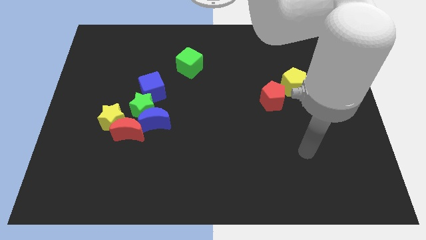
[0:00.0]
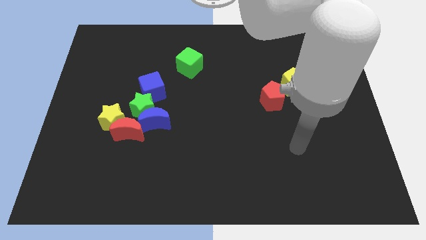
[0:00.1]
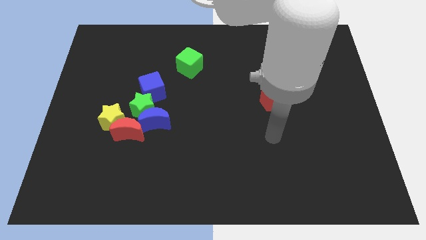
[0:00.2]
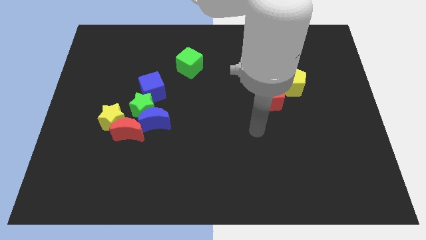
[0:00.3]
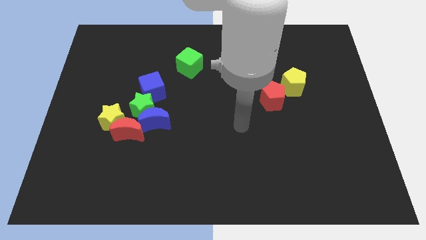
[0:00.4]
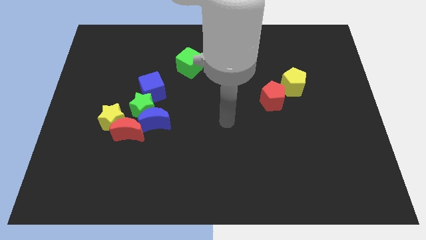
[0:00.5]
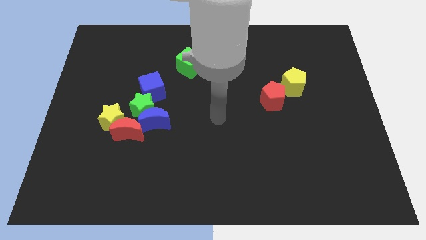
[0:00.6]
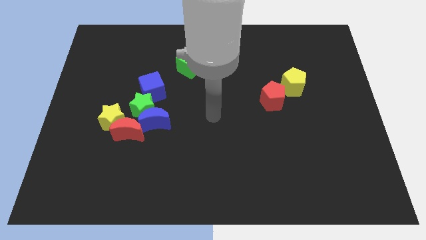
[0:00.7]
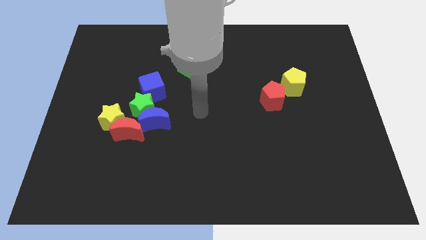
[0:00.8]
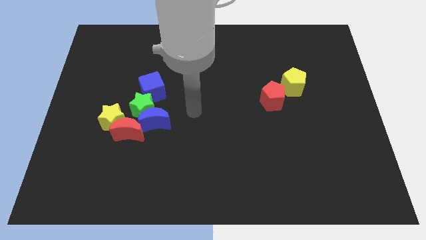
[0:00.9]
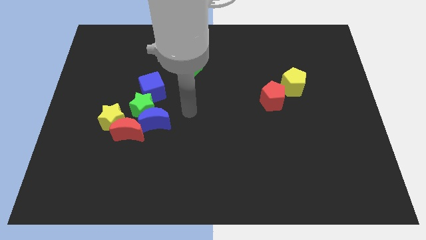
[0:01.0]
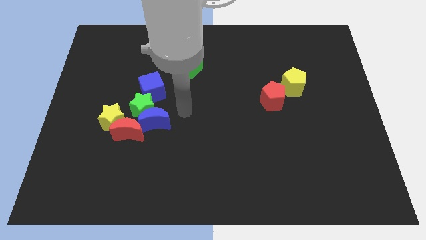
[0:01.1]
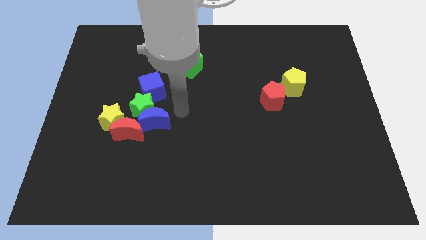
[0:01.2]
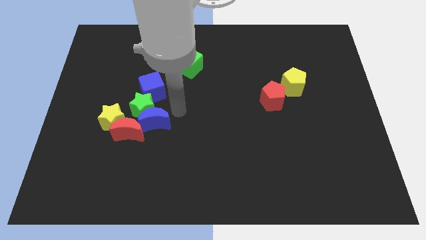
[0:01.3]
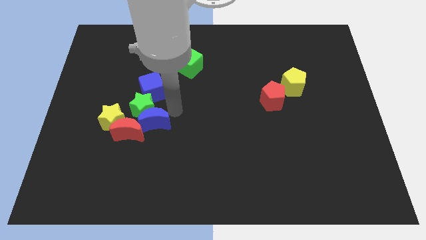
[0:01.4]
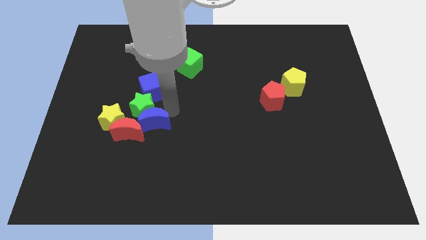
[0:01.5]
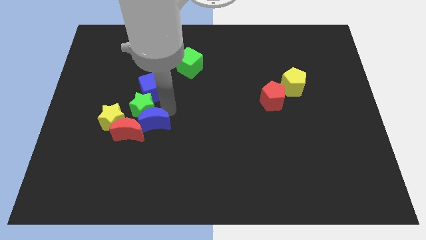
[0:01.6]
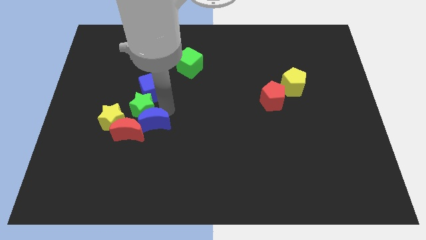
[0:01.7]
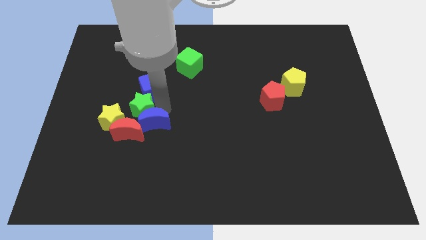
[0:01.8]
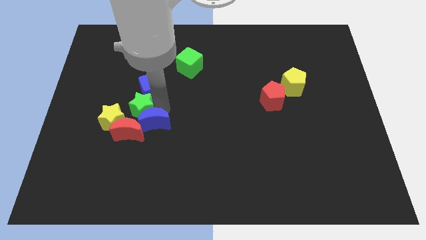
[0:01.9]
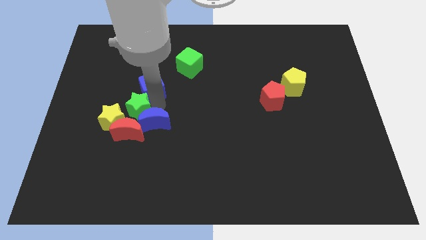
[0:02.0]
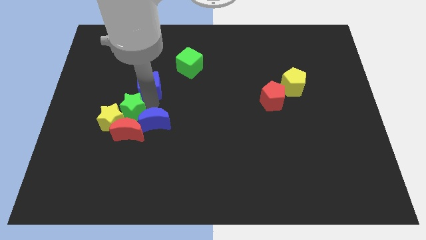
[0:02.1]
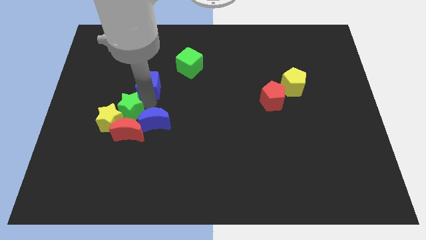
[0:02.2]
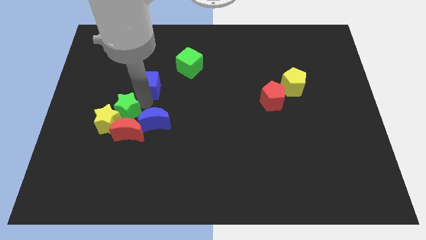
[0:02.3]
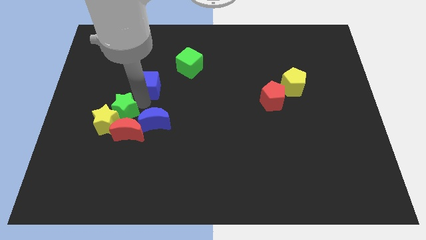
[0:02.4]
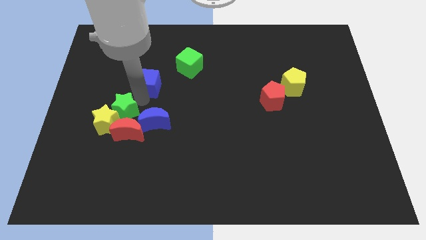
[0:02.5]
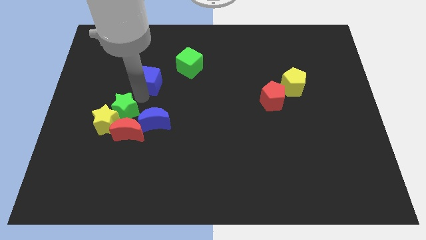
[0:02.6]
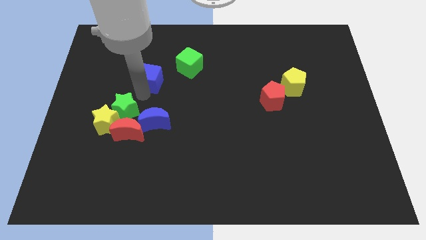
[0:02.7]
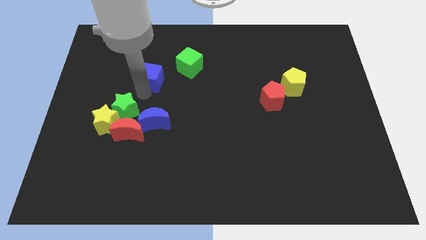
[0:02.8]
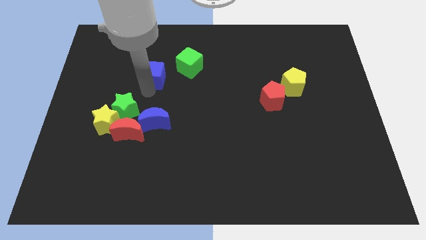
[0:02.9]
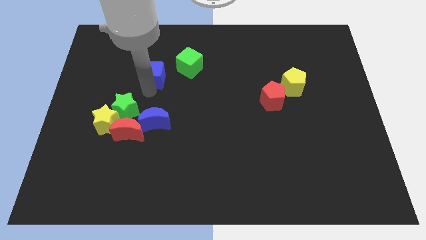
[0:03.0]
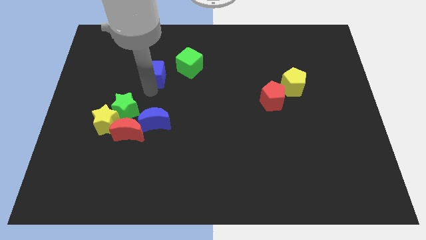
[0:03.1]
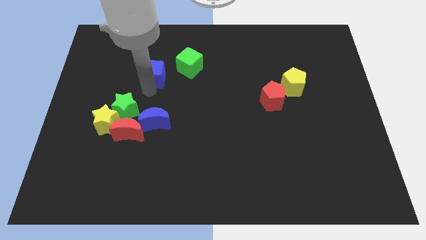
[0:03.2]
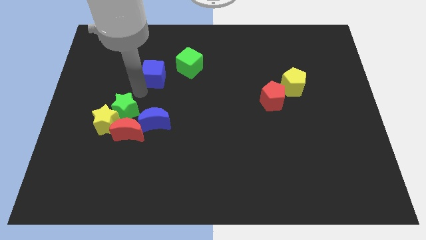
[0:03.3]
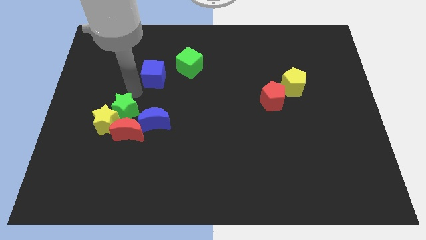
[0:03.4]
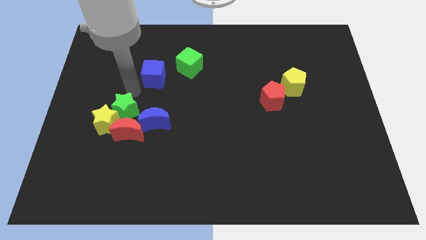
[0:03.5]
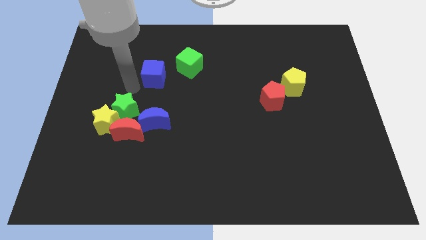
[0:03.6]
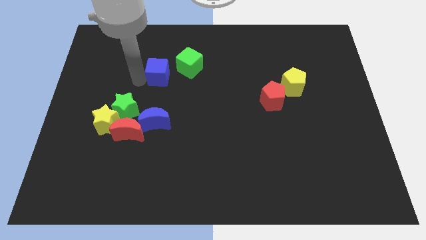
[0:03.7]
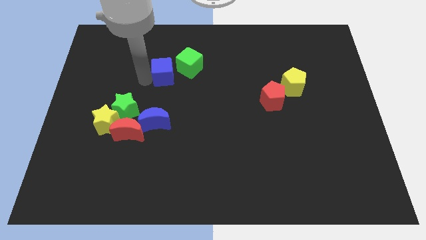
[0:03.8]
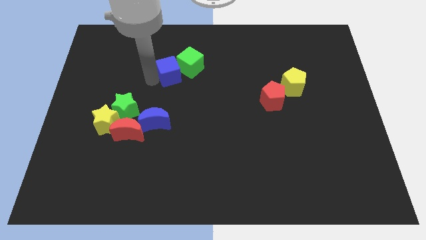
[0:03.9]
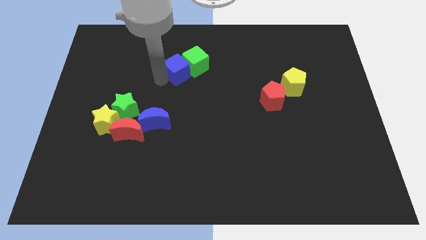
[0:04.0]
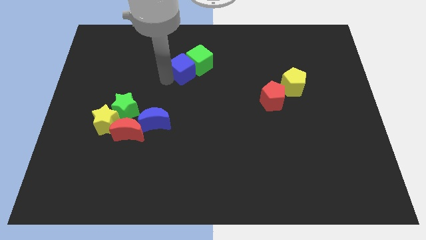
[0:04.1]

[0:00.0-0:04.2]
move the blue cube to the green cube

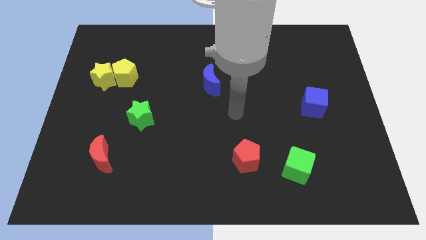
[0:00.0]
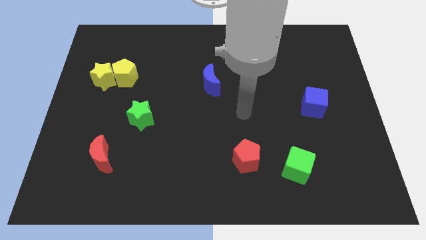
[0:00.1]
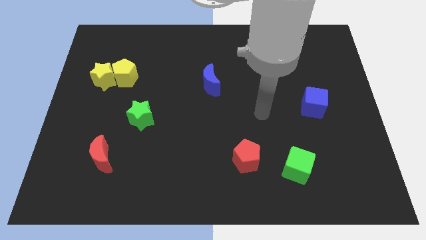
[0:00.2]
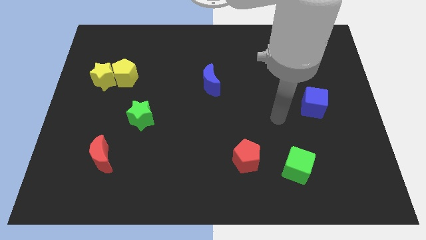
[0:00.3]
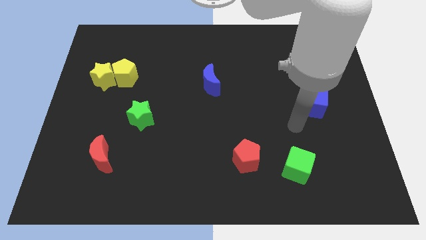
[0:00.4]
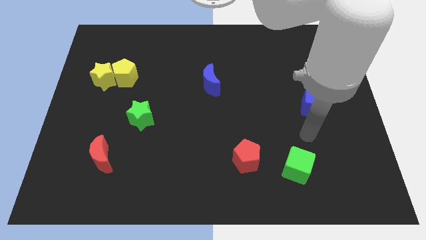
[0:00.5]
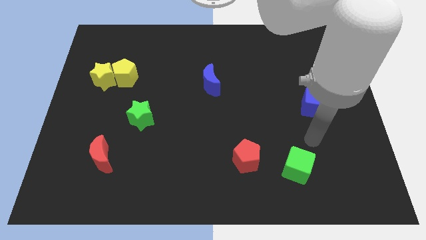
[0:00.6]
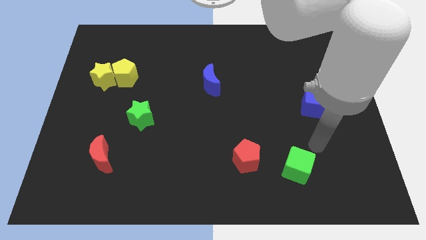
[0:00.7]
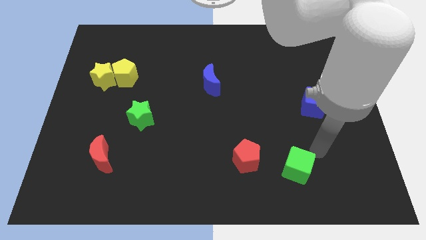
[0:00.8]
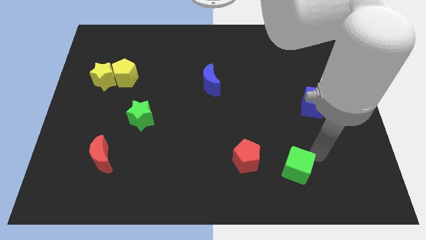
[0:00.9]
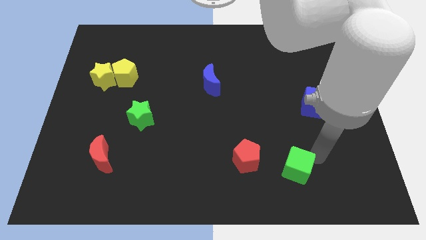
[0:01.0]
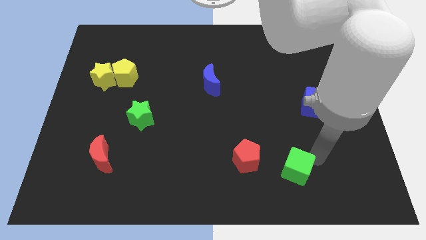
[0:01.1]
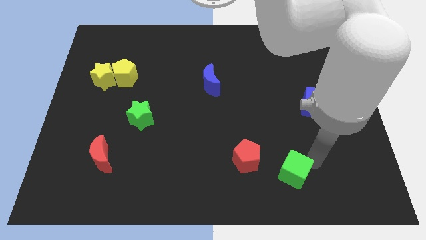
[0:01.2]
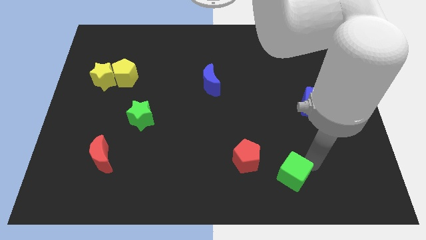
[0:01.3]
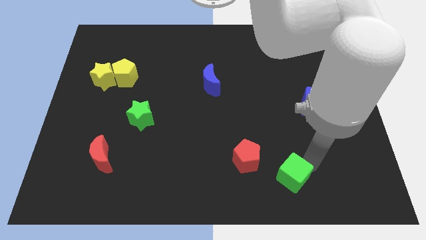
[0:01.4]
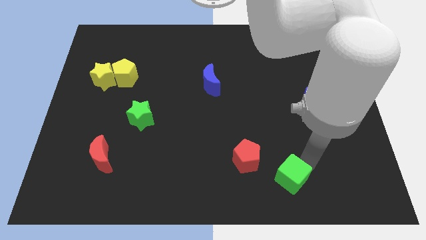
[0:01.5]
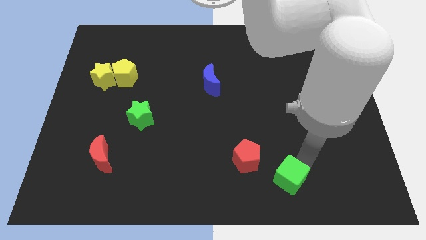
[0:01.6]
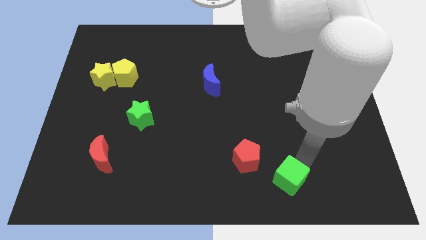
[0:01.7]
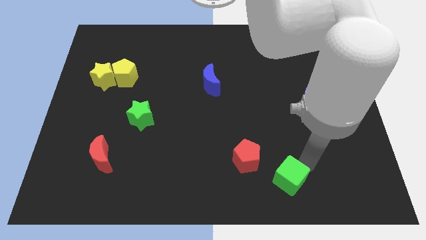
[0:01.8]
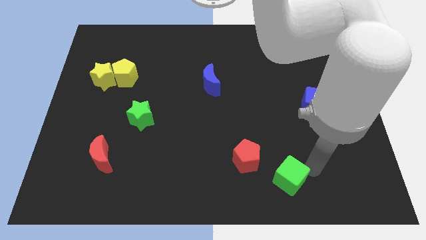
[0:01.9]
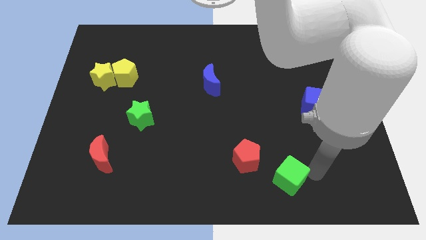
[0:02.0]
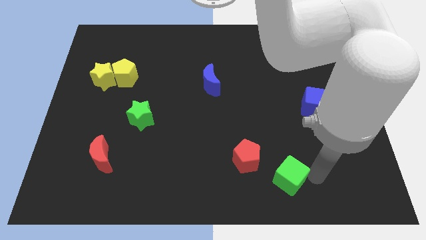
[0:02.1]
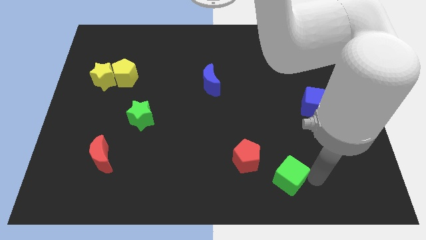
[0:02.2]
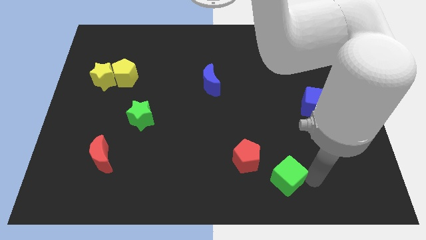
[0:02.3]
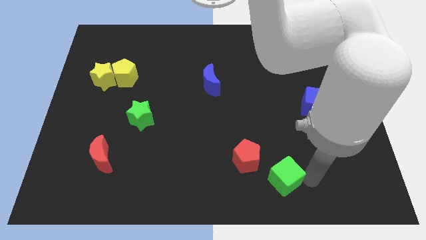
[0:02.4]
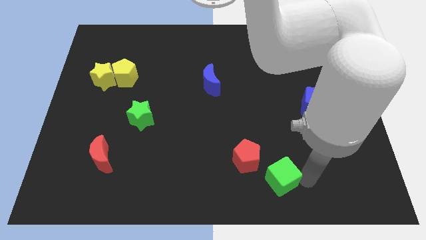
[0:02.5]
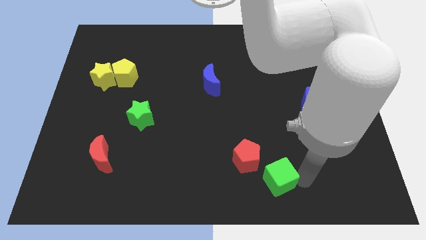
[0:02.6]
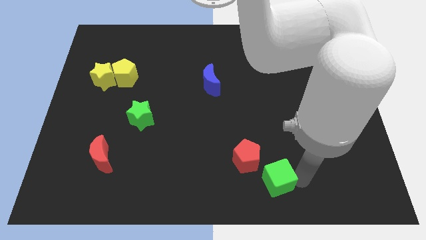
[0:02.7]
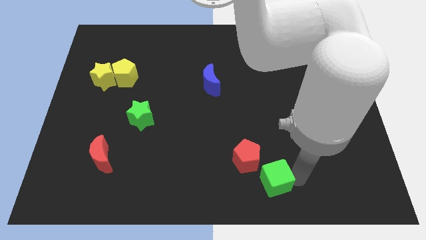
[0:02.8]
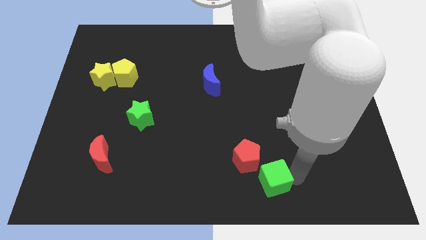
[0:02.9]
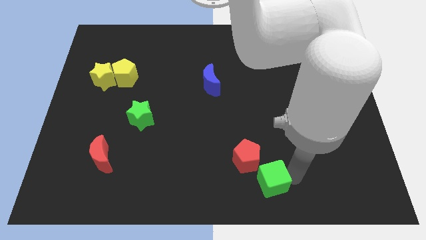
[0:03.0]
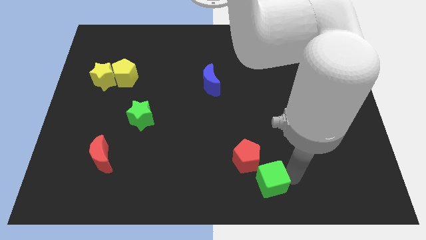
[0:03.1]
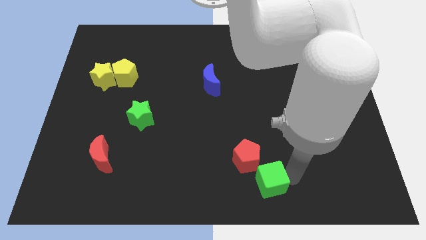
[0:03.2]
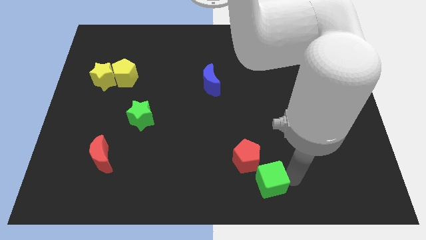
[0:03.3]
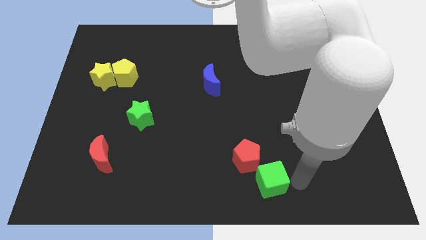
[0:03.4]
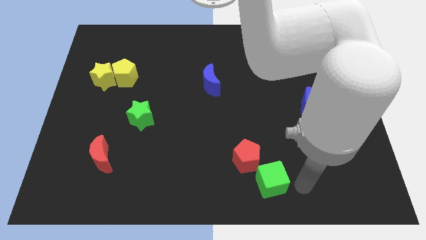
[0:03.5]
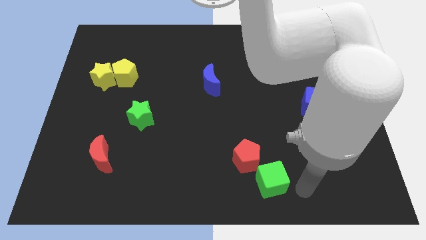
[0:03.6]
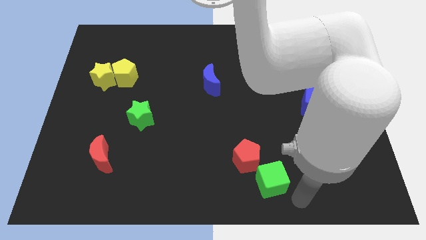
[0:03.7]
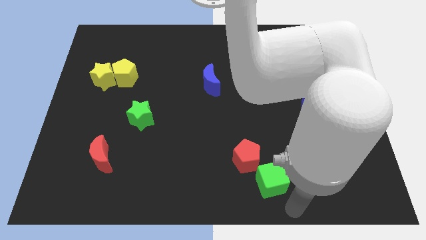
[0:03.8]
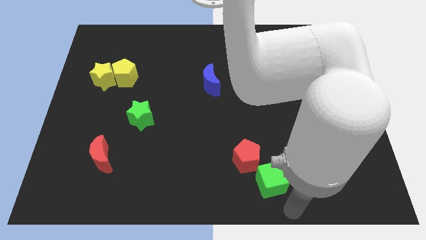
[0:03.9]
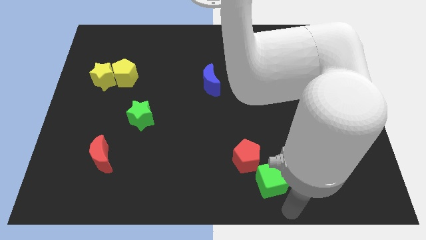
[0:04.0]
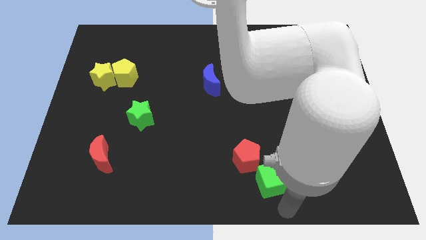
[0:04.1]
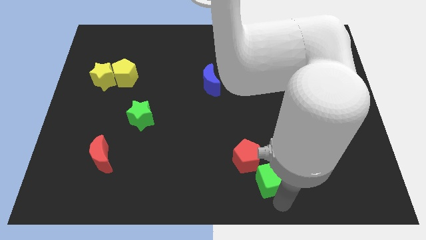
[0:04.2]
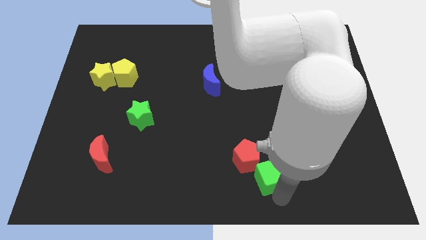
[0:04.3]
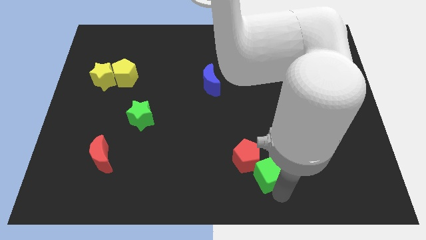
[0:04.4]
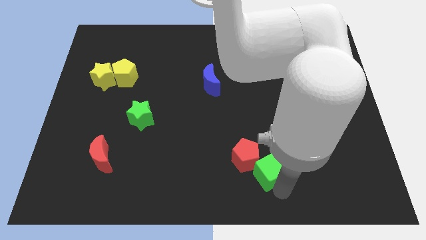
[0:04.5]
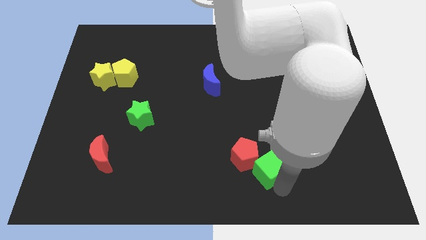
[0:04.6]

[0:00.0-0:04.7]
push the green cube towards the red pentagon
